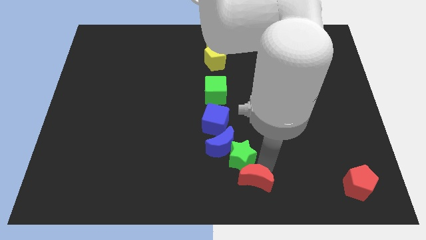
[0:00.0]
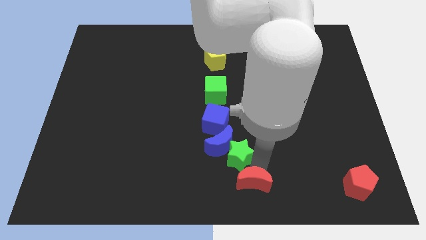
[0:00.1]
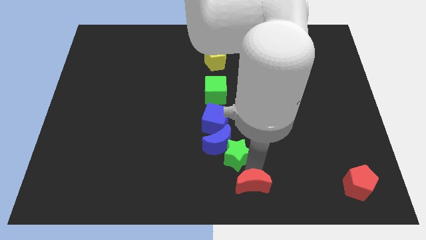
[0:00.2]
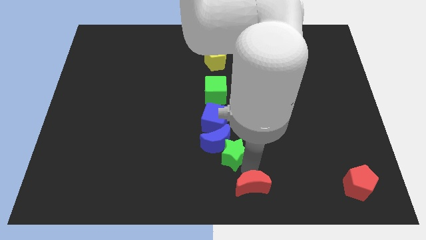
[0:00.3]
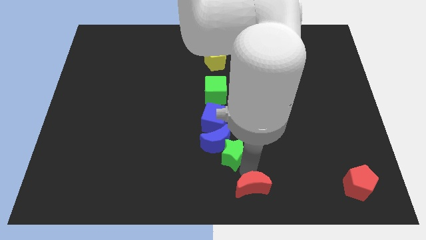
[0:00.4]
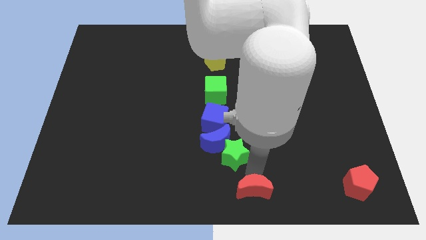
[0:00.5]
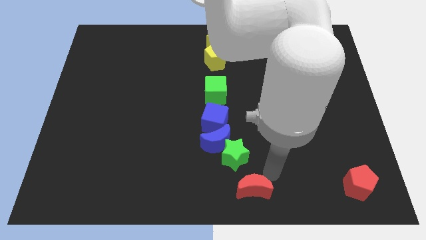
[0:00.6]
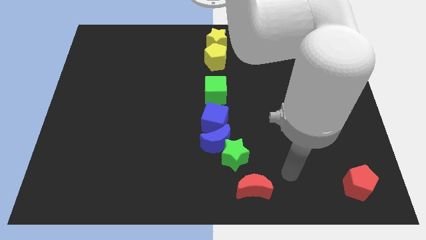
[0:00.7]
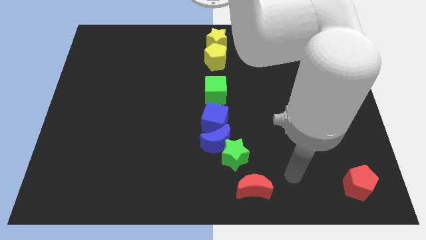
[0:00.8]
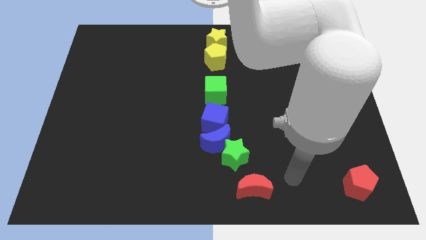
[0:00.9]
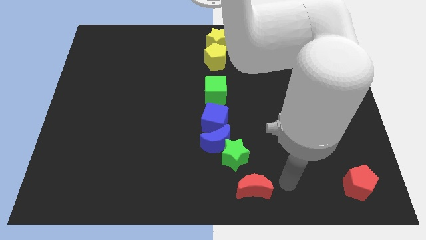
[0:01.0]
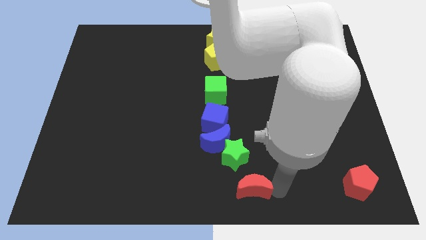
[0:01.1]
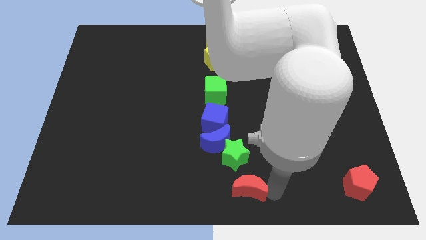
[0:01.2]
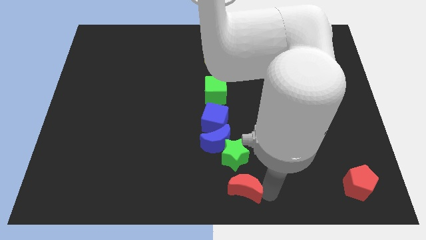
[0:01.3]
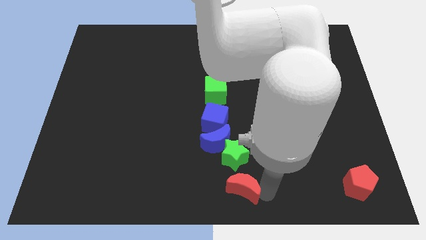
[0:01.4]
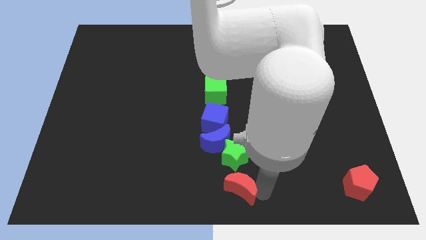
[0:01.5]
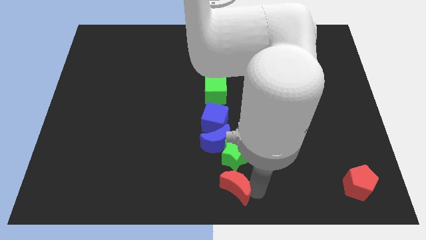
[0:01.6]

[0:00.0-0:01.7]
place the red moon left to the red pentagon

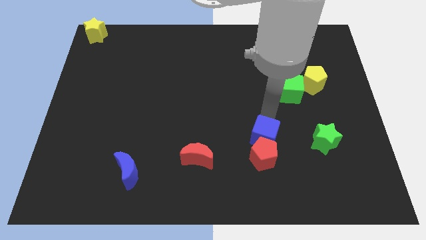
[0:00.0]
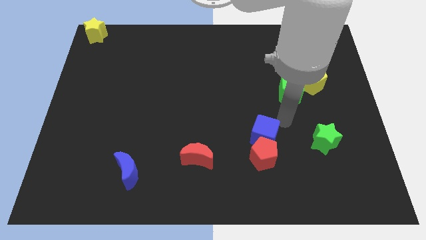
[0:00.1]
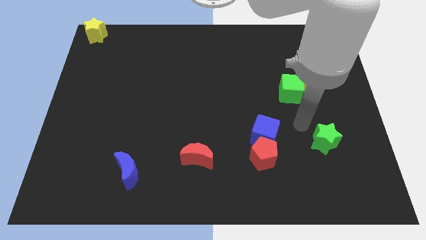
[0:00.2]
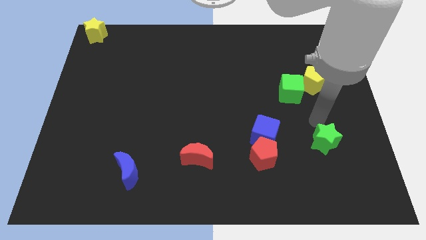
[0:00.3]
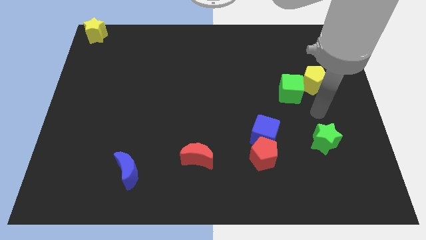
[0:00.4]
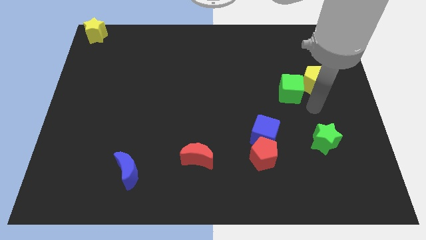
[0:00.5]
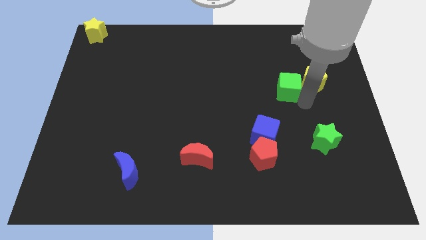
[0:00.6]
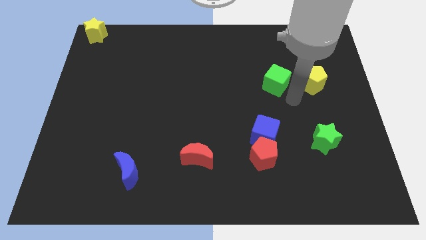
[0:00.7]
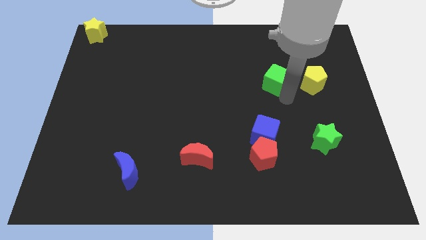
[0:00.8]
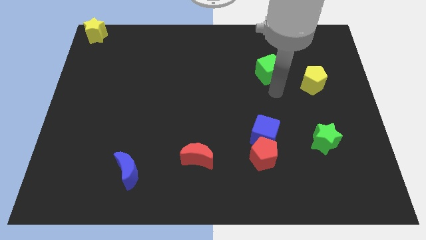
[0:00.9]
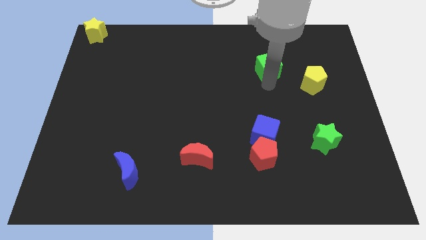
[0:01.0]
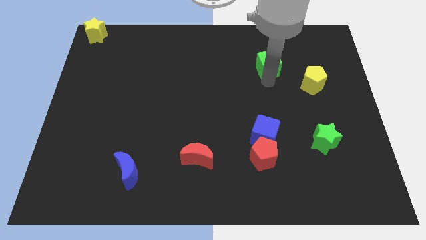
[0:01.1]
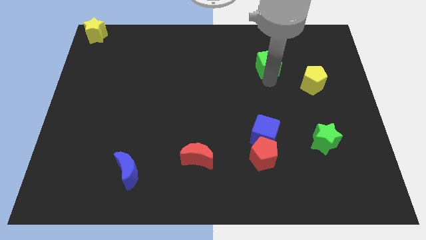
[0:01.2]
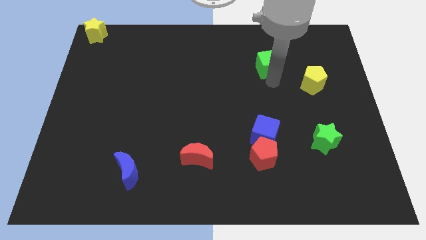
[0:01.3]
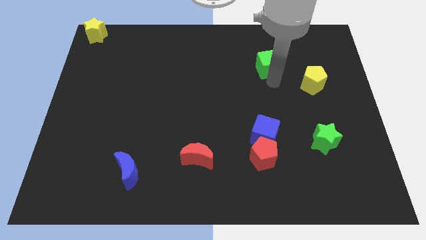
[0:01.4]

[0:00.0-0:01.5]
slide the green cube away from the left side of the yellow pentagon

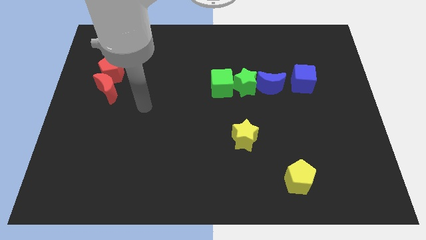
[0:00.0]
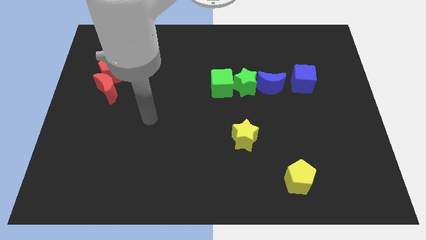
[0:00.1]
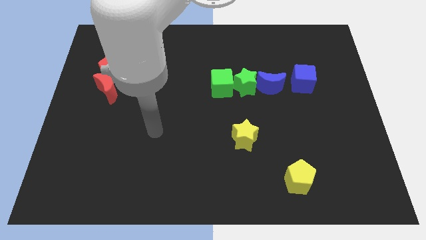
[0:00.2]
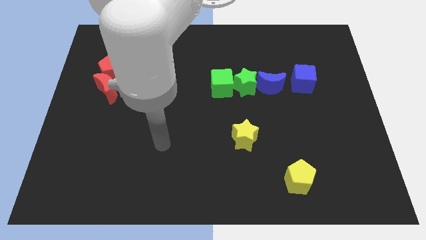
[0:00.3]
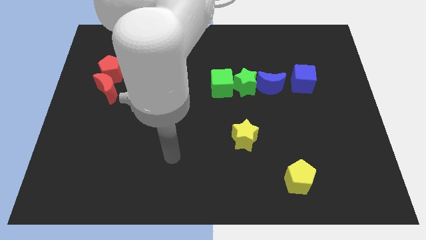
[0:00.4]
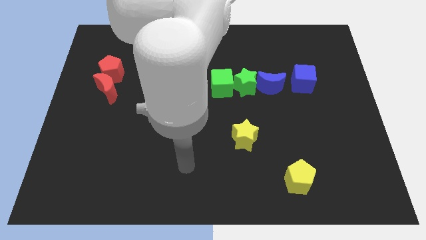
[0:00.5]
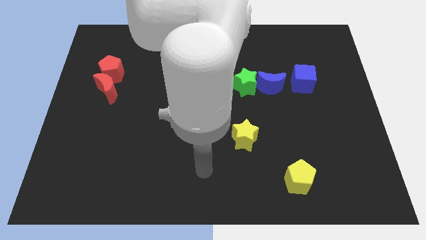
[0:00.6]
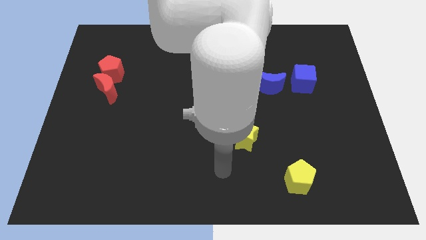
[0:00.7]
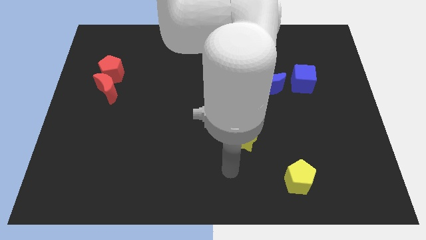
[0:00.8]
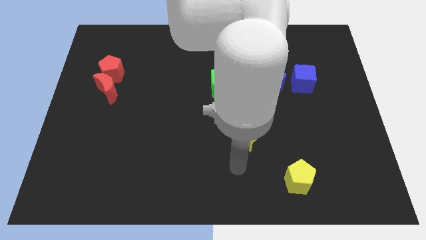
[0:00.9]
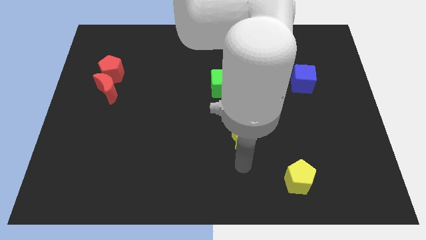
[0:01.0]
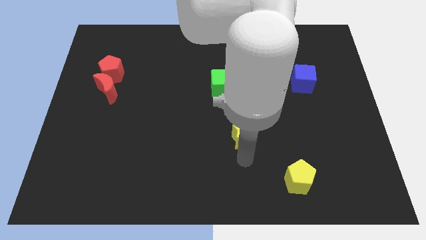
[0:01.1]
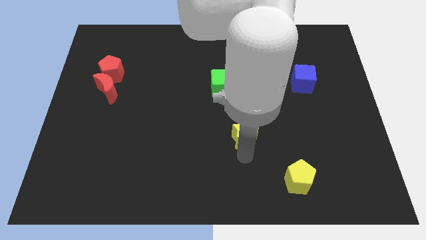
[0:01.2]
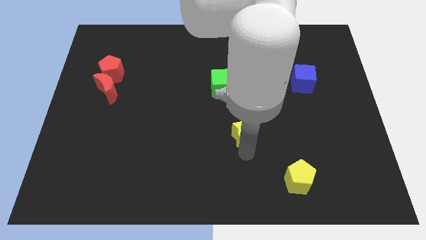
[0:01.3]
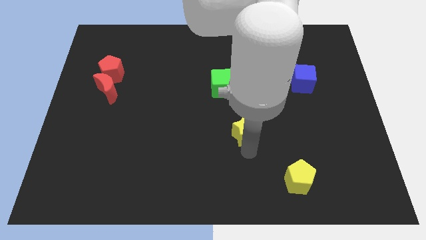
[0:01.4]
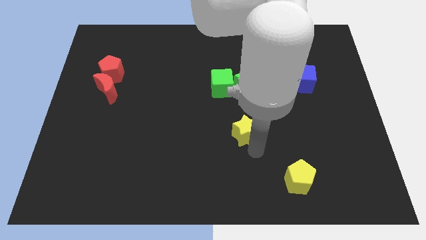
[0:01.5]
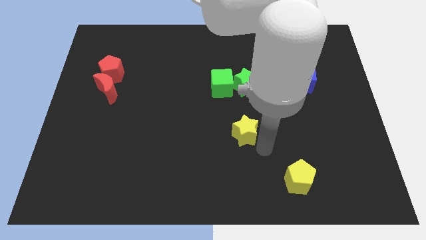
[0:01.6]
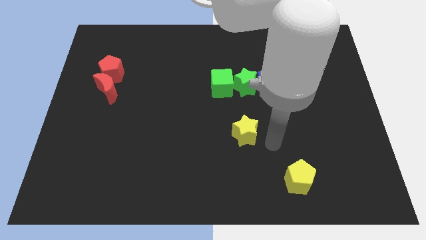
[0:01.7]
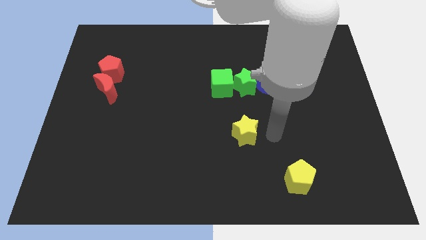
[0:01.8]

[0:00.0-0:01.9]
slide the yellow star slightly upwards

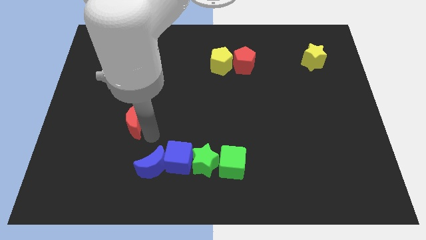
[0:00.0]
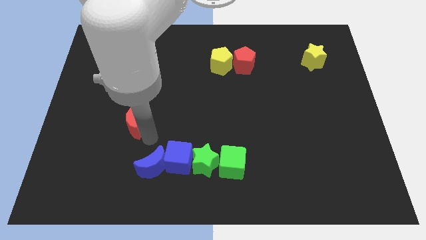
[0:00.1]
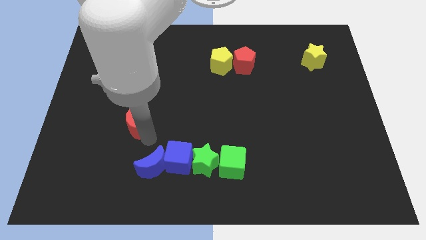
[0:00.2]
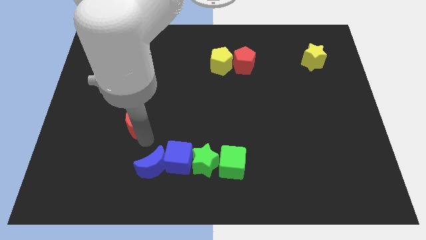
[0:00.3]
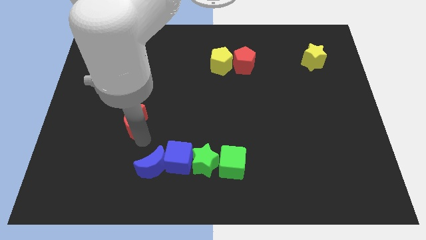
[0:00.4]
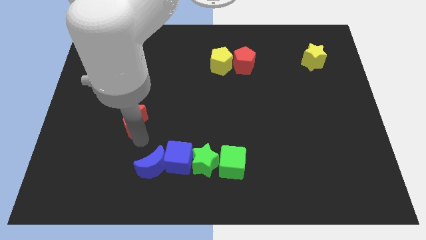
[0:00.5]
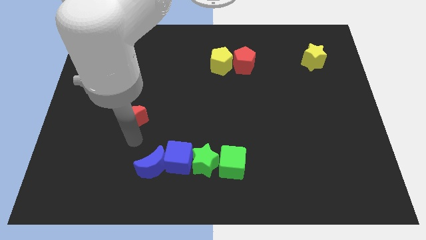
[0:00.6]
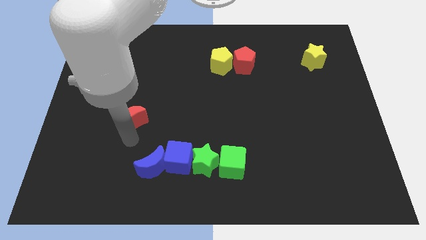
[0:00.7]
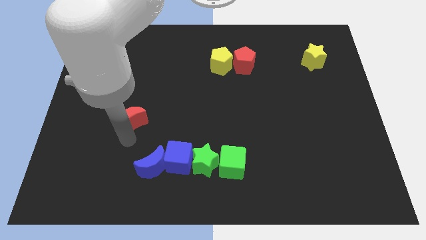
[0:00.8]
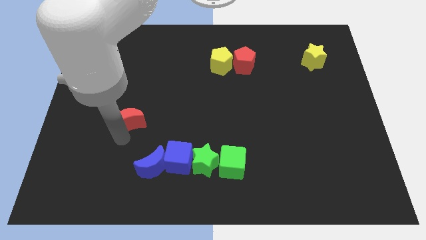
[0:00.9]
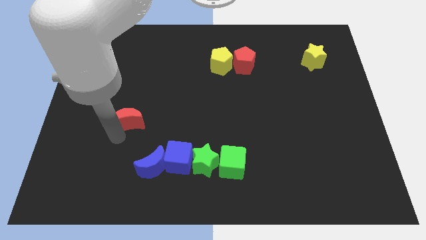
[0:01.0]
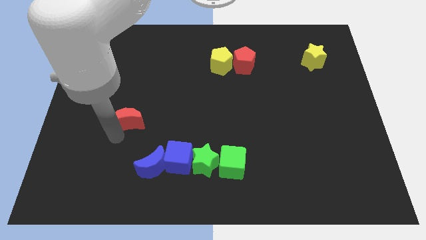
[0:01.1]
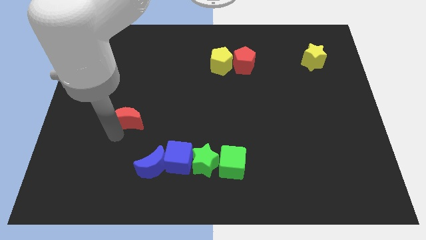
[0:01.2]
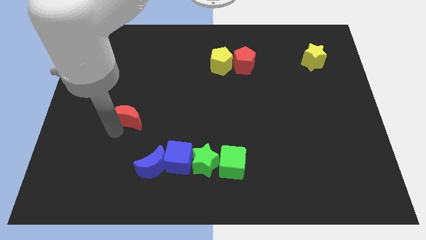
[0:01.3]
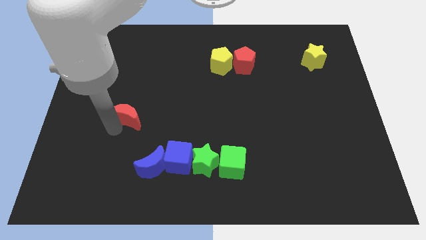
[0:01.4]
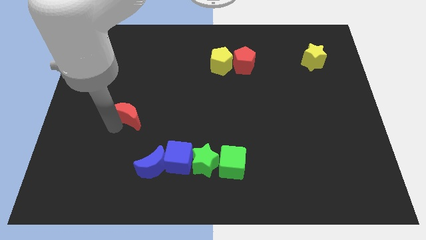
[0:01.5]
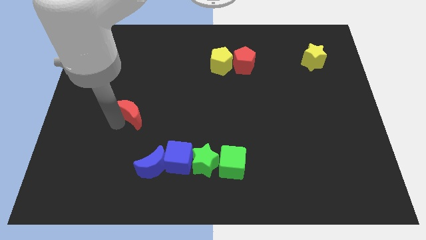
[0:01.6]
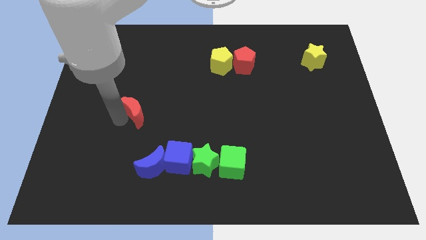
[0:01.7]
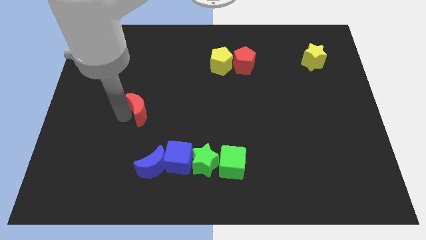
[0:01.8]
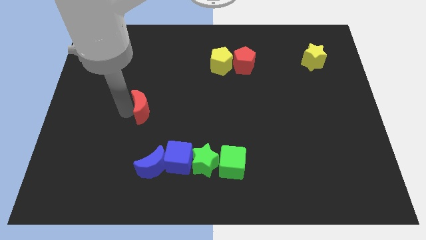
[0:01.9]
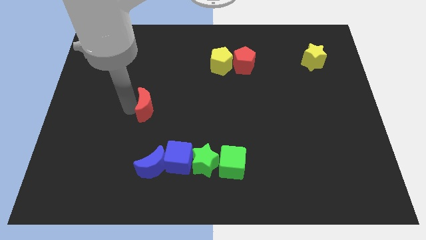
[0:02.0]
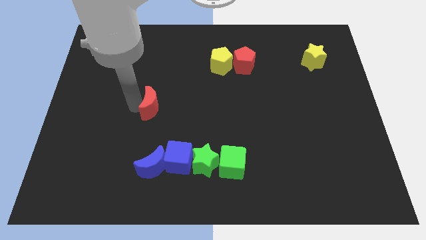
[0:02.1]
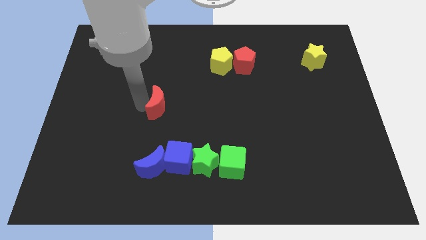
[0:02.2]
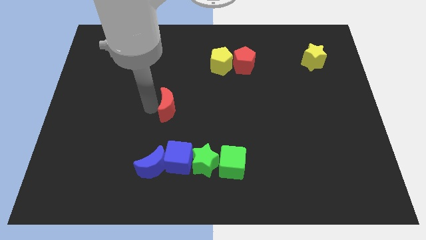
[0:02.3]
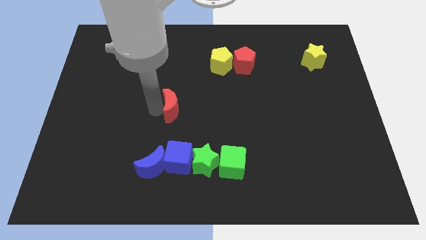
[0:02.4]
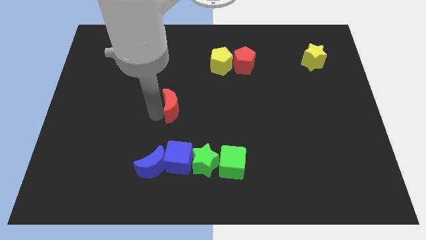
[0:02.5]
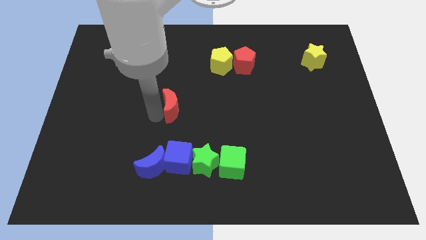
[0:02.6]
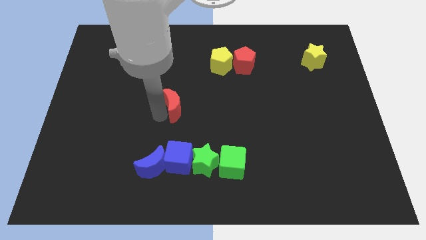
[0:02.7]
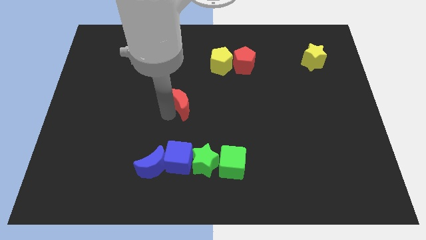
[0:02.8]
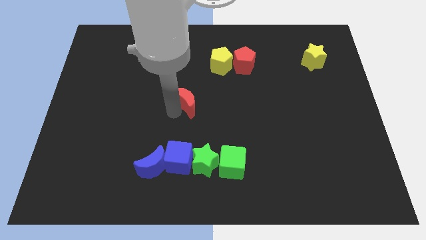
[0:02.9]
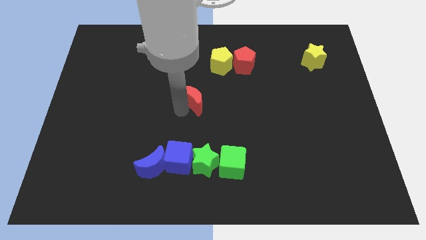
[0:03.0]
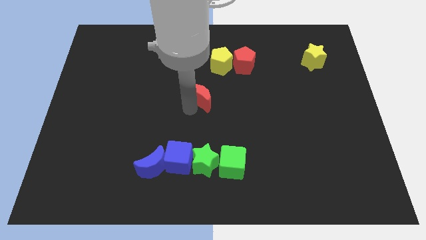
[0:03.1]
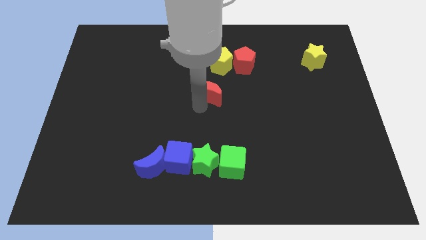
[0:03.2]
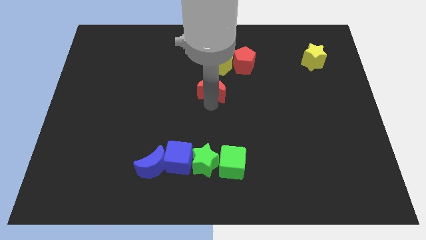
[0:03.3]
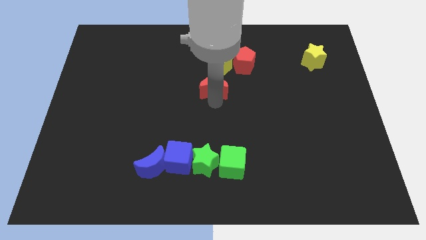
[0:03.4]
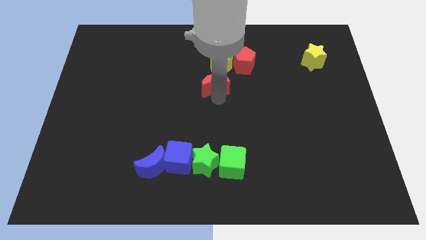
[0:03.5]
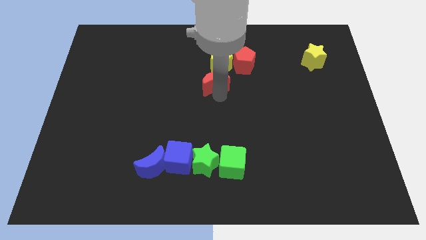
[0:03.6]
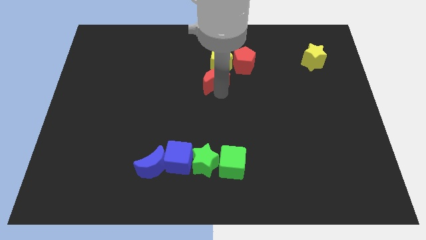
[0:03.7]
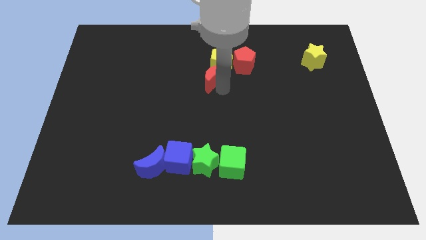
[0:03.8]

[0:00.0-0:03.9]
move the red crescent below the yellow pentagon
